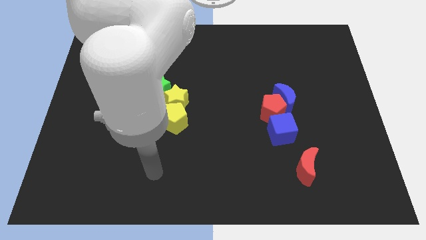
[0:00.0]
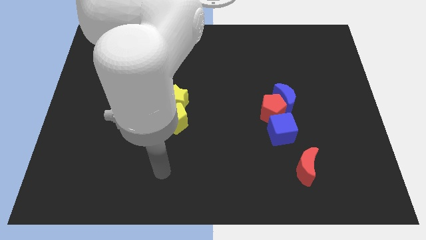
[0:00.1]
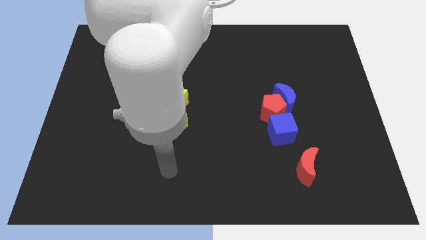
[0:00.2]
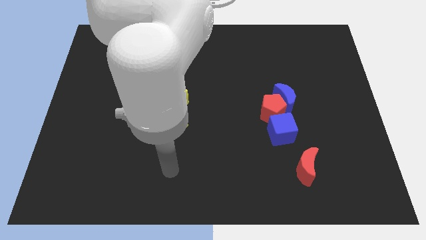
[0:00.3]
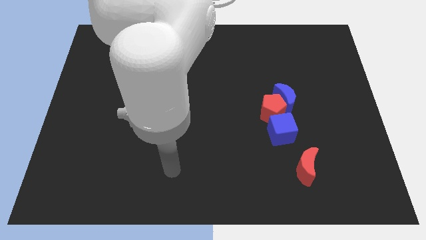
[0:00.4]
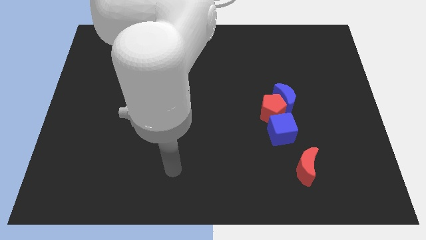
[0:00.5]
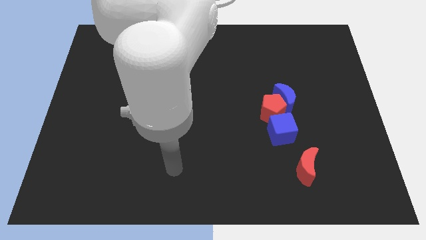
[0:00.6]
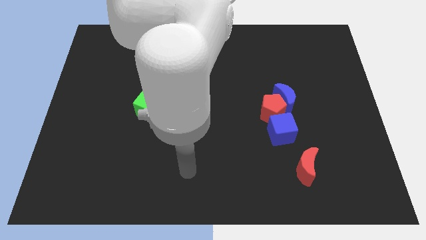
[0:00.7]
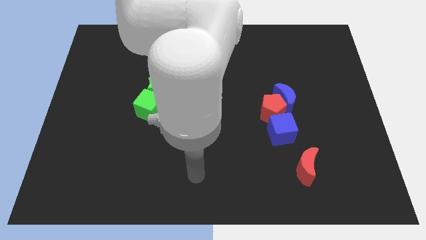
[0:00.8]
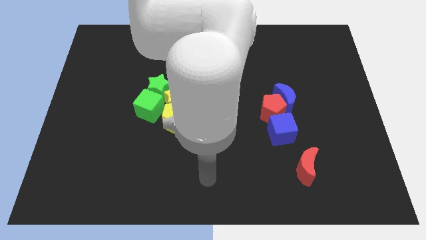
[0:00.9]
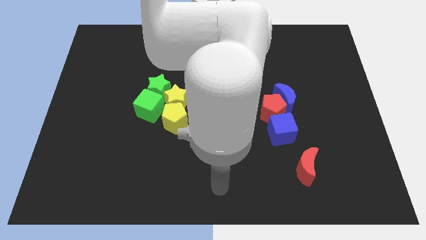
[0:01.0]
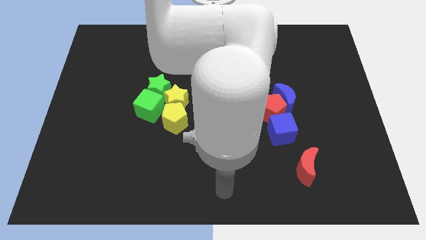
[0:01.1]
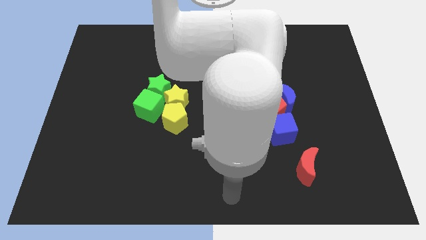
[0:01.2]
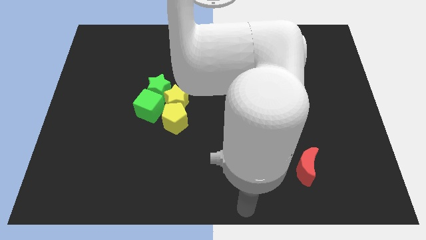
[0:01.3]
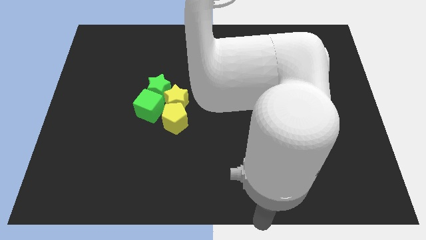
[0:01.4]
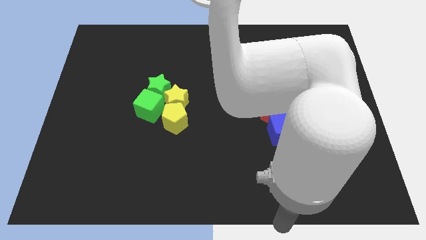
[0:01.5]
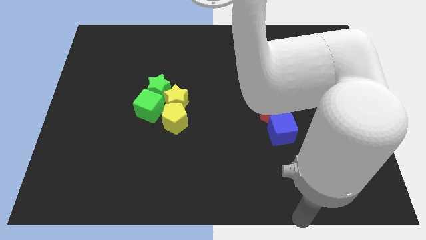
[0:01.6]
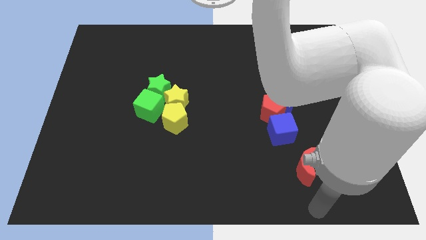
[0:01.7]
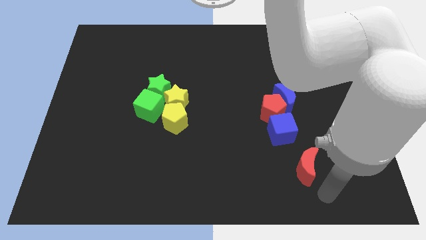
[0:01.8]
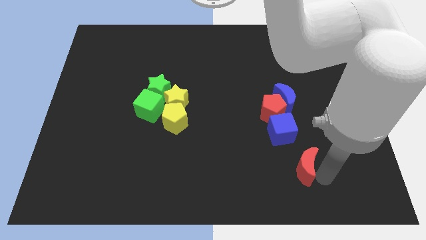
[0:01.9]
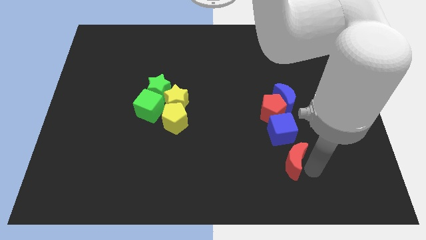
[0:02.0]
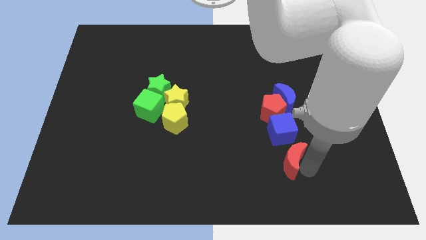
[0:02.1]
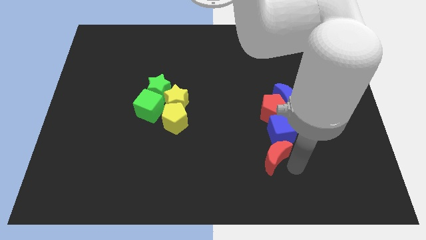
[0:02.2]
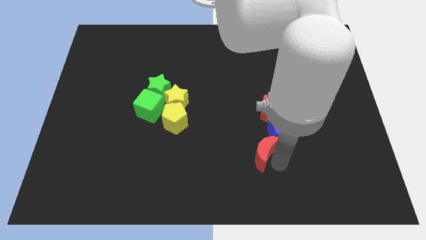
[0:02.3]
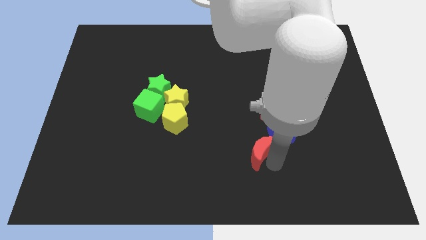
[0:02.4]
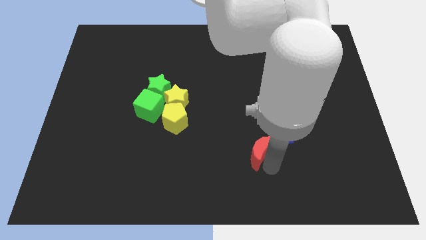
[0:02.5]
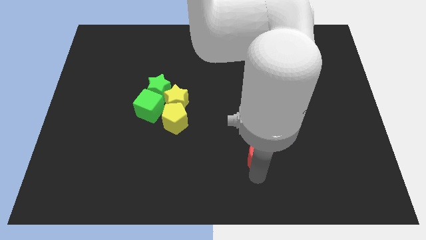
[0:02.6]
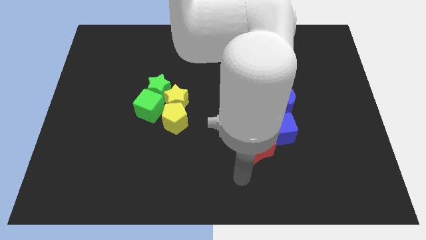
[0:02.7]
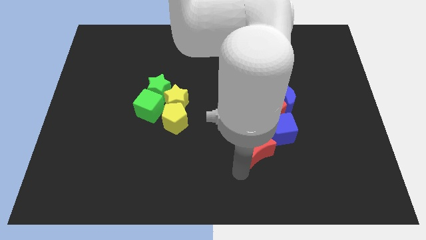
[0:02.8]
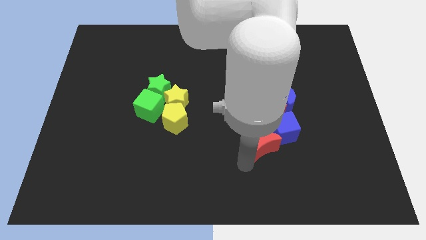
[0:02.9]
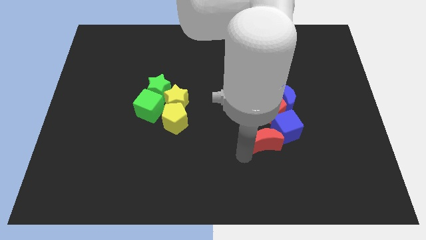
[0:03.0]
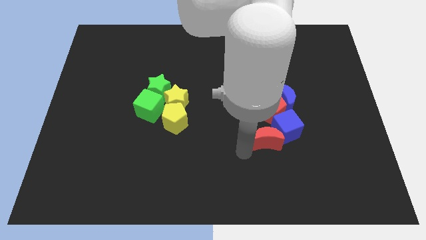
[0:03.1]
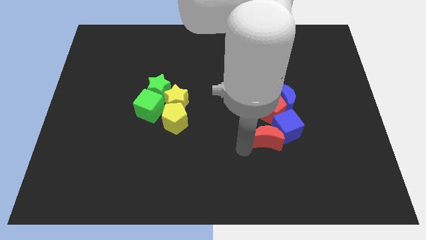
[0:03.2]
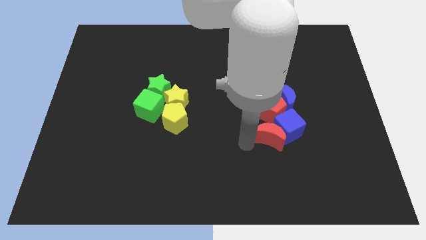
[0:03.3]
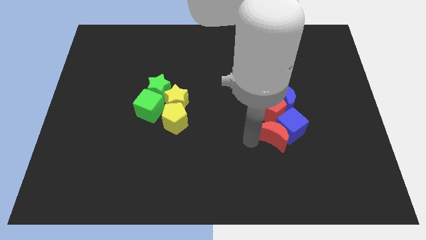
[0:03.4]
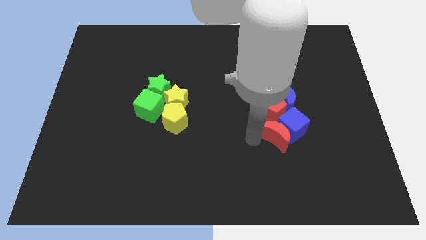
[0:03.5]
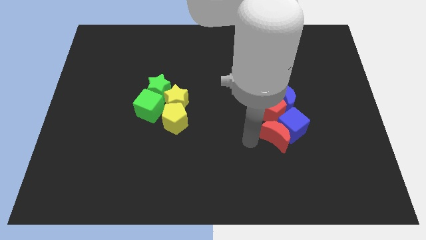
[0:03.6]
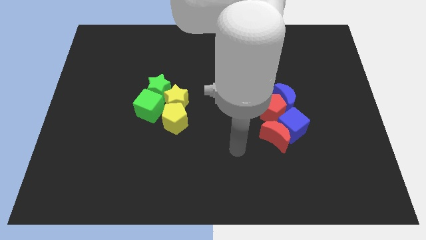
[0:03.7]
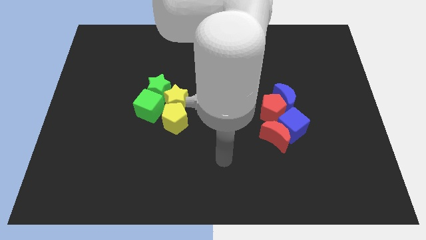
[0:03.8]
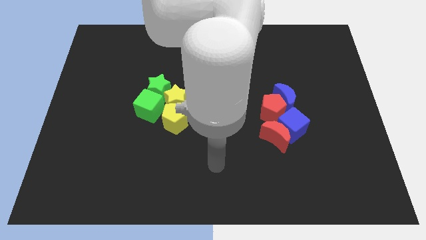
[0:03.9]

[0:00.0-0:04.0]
place red moon to the left side of blue cube

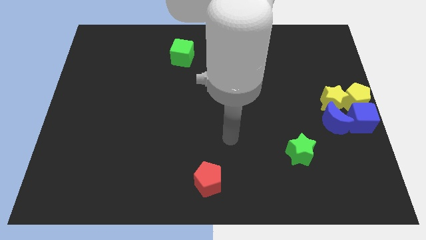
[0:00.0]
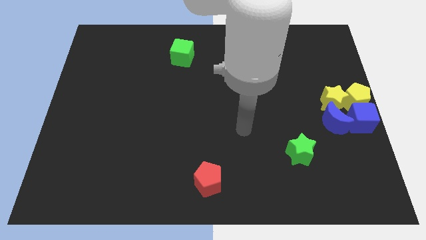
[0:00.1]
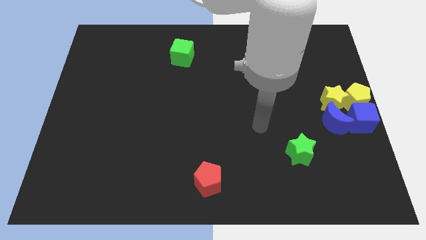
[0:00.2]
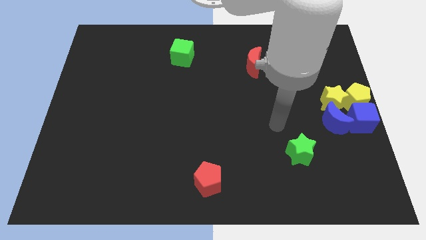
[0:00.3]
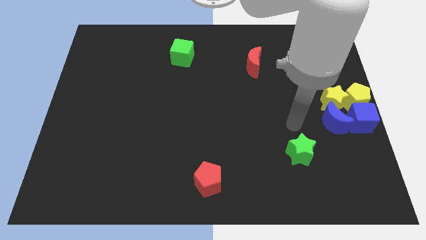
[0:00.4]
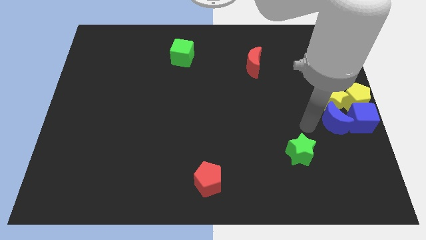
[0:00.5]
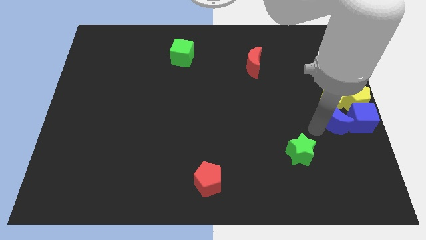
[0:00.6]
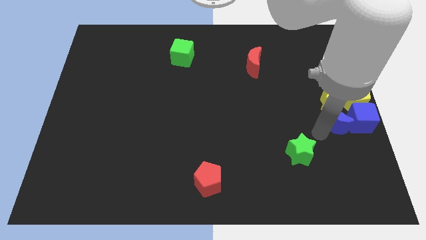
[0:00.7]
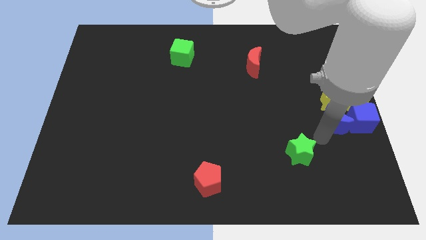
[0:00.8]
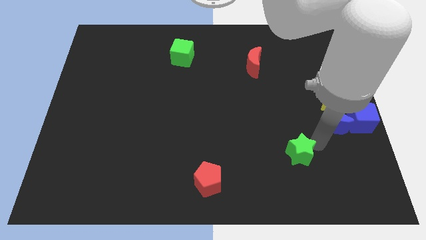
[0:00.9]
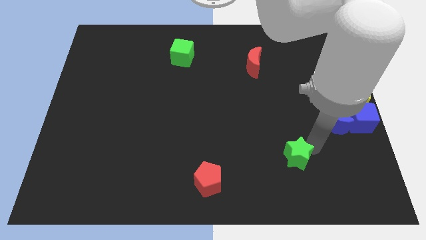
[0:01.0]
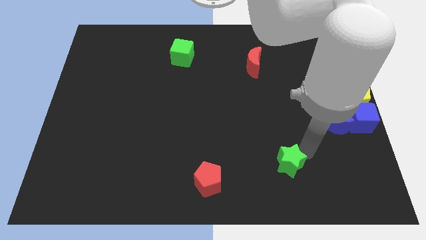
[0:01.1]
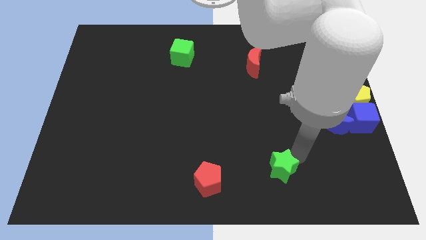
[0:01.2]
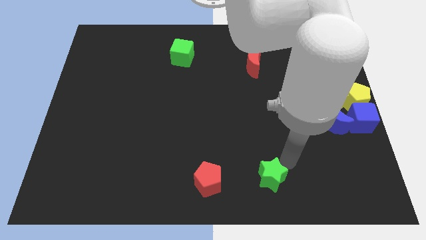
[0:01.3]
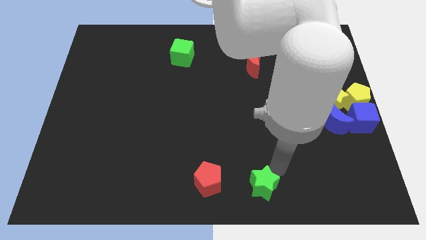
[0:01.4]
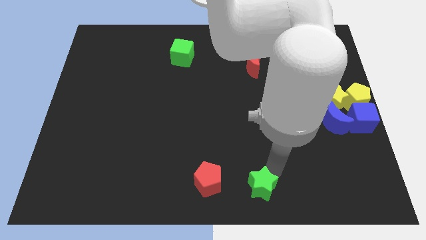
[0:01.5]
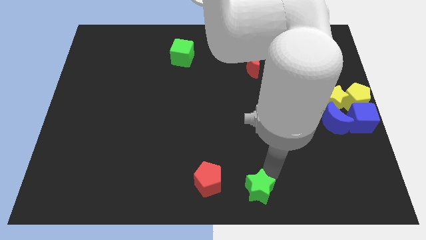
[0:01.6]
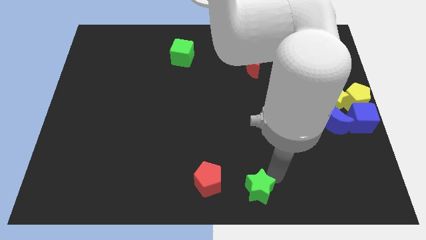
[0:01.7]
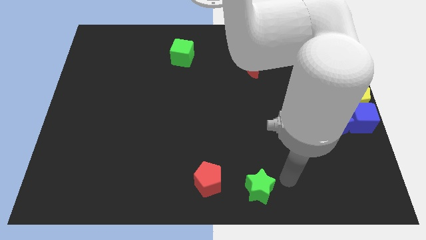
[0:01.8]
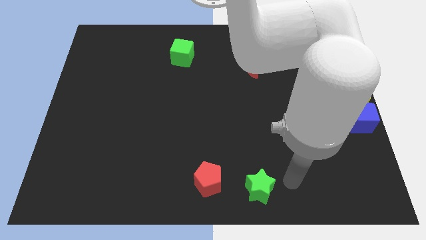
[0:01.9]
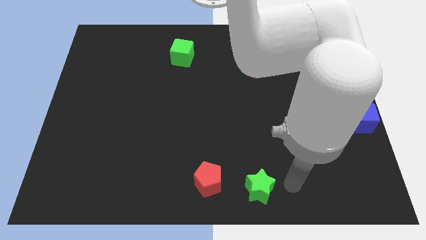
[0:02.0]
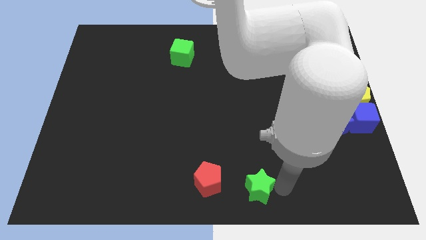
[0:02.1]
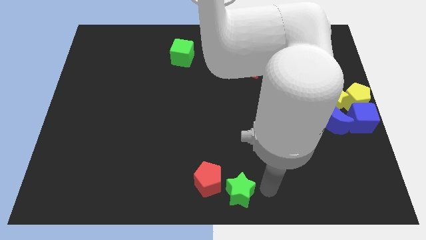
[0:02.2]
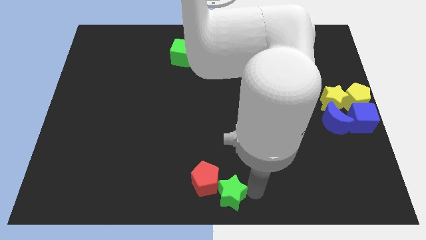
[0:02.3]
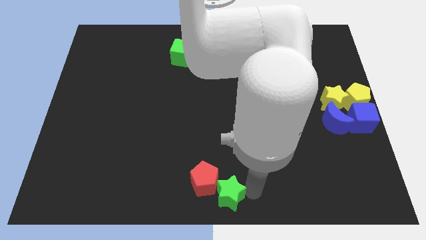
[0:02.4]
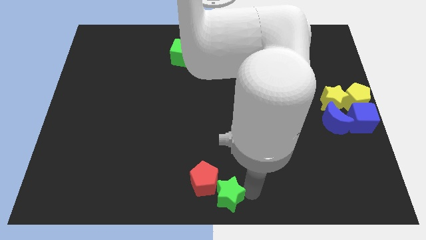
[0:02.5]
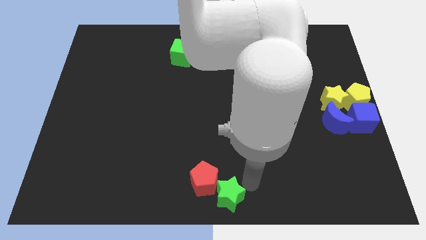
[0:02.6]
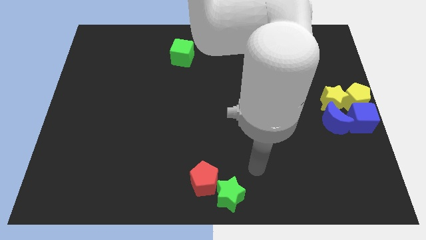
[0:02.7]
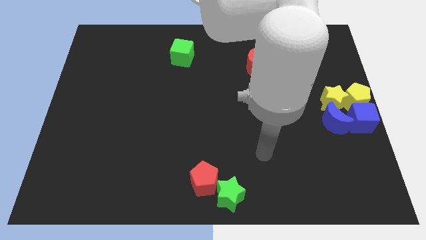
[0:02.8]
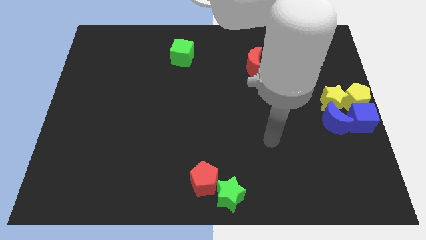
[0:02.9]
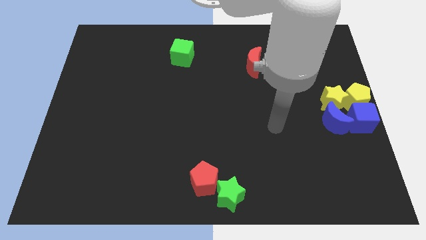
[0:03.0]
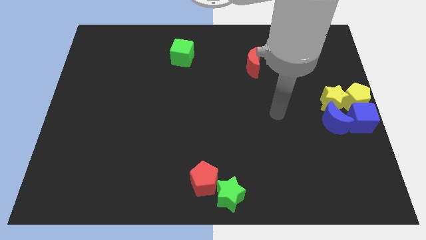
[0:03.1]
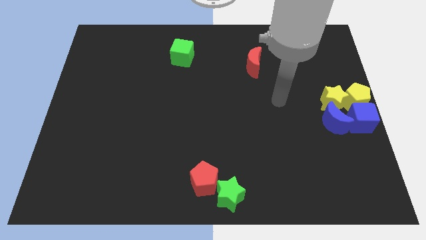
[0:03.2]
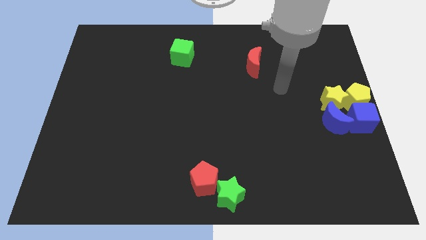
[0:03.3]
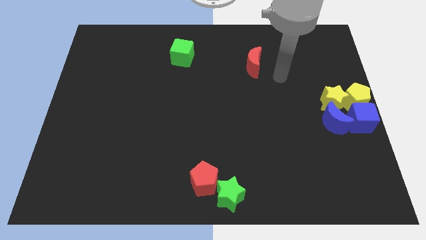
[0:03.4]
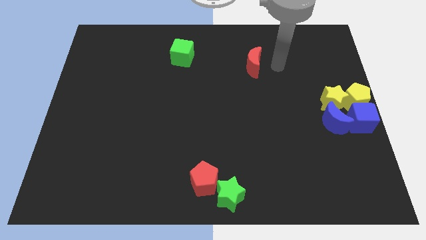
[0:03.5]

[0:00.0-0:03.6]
move the green star to the bottom right of the red pentagon

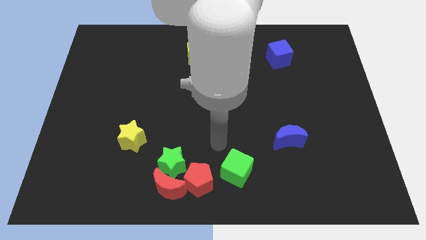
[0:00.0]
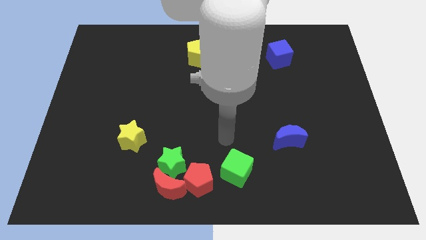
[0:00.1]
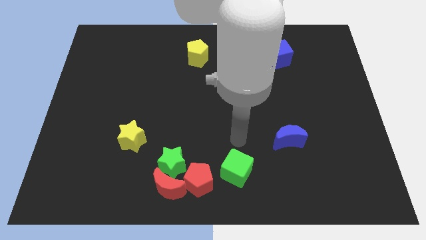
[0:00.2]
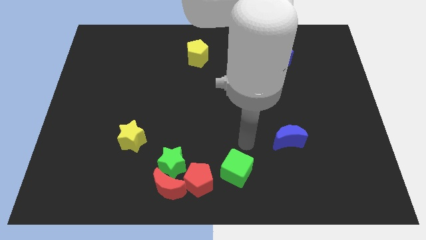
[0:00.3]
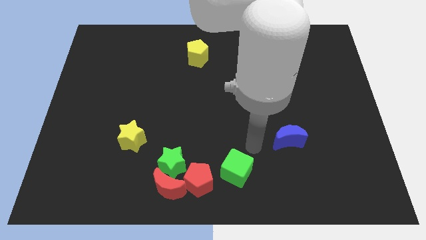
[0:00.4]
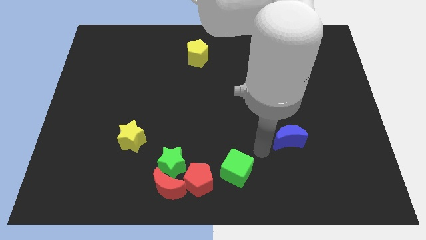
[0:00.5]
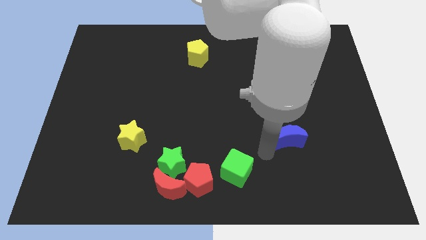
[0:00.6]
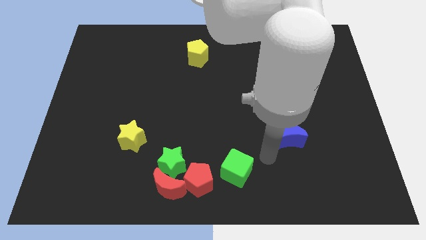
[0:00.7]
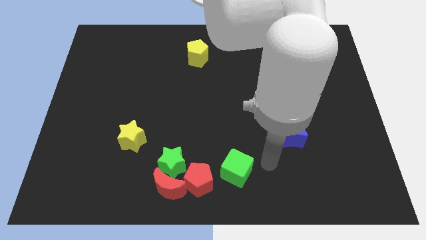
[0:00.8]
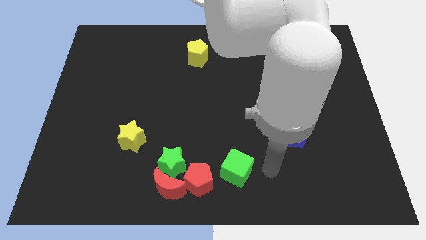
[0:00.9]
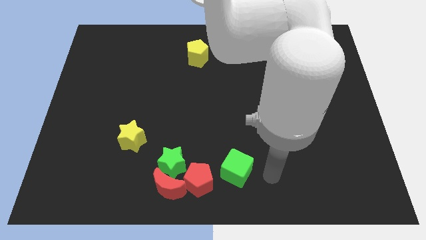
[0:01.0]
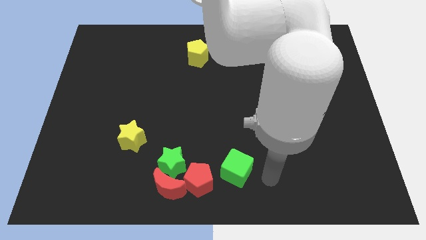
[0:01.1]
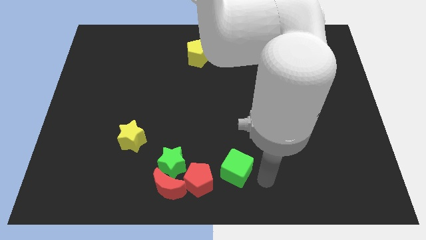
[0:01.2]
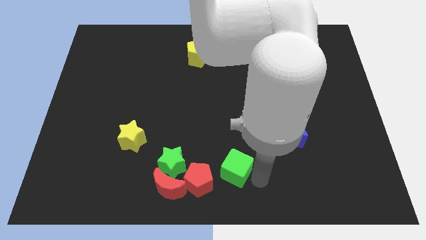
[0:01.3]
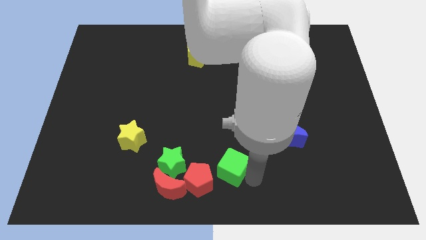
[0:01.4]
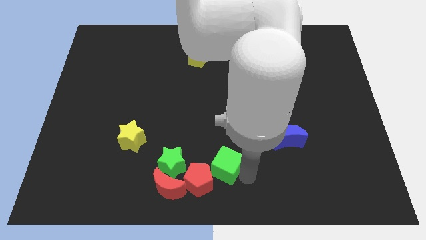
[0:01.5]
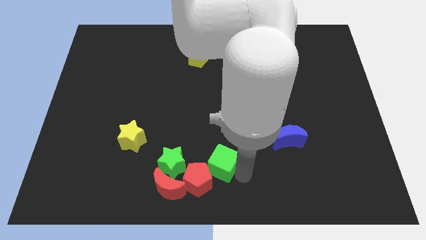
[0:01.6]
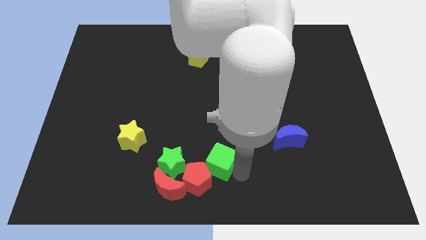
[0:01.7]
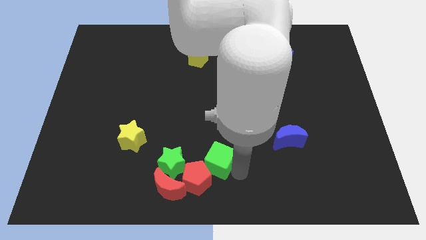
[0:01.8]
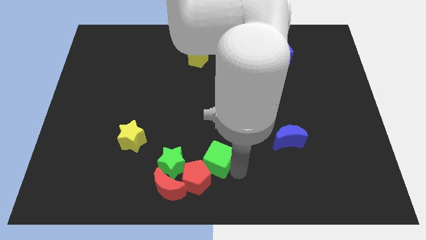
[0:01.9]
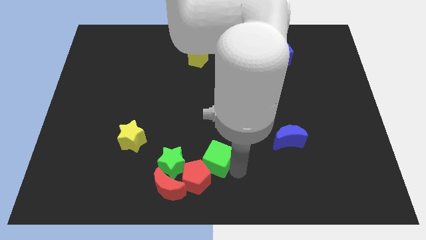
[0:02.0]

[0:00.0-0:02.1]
move the arm below green cube
